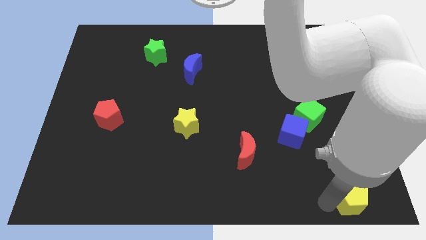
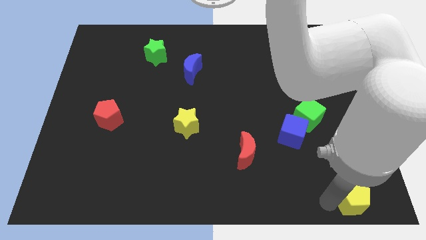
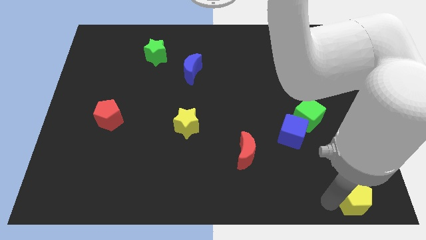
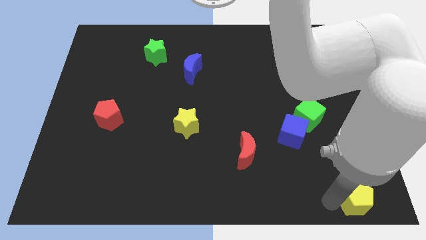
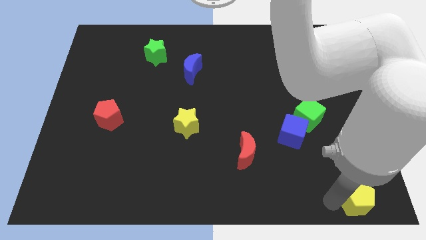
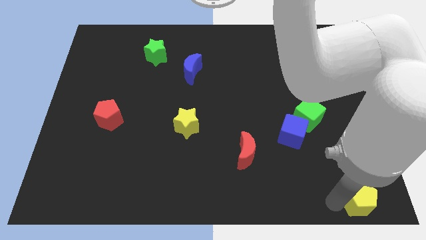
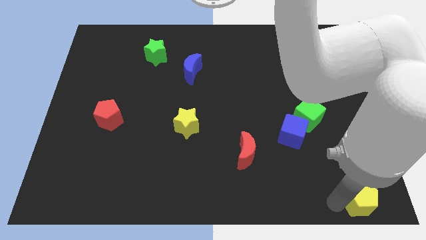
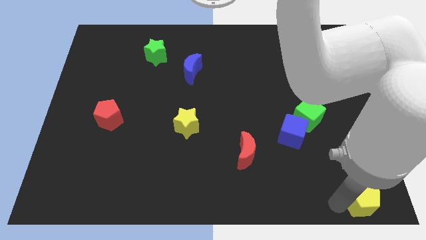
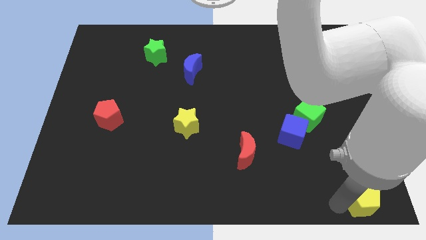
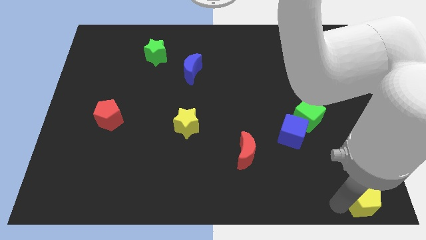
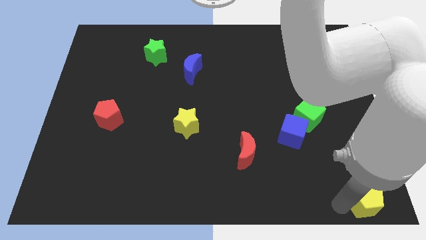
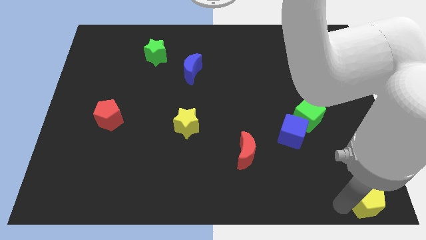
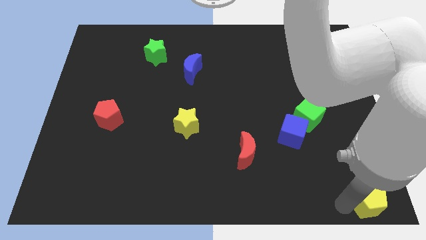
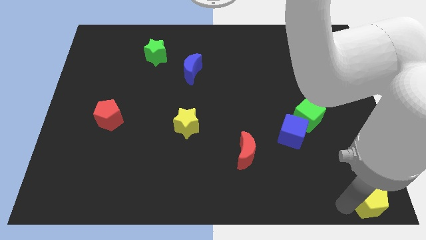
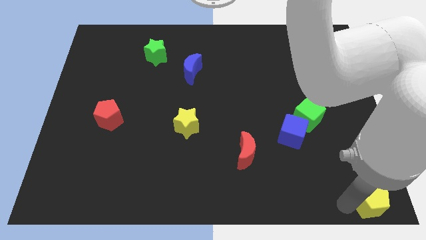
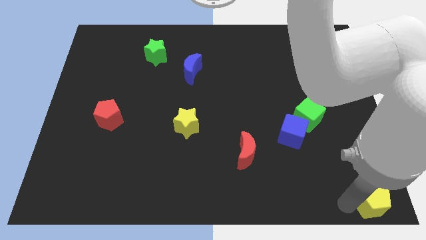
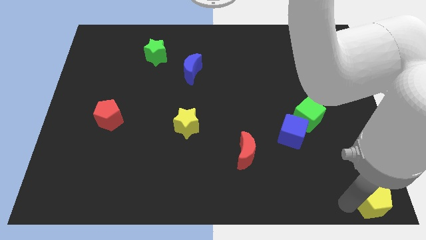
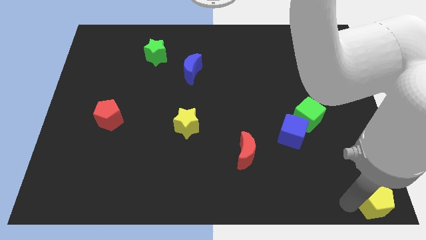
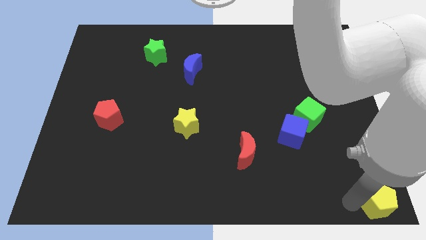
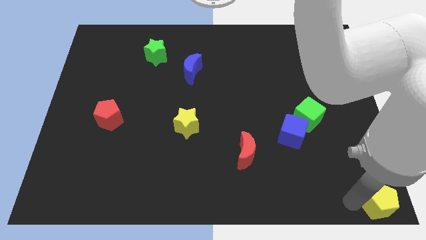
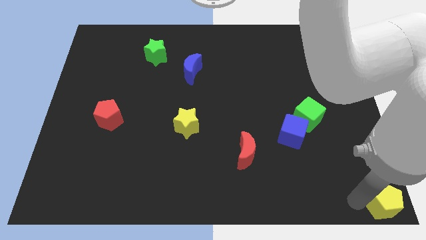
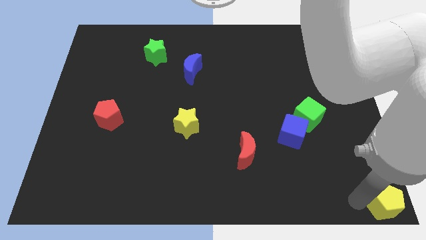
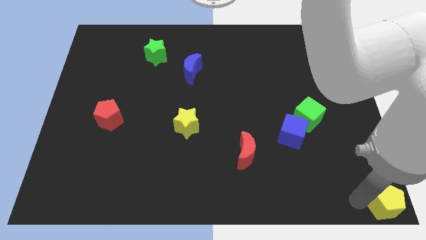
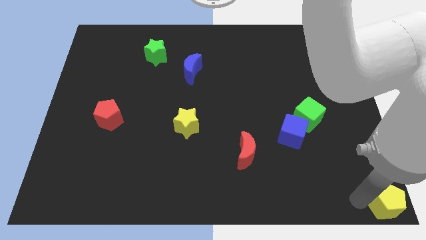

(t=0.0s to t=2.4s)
place the yellow pentagon to the right side of the board

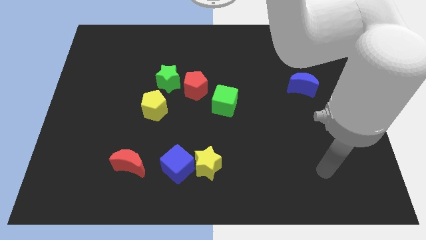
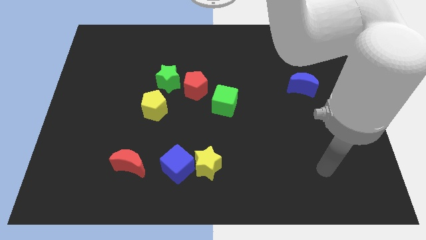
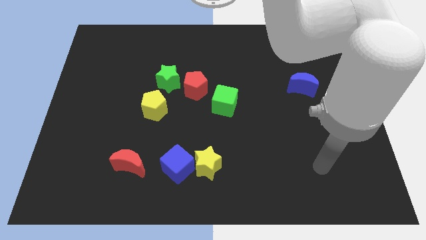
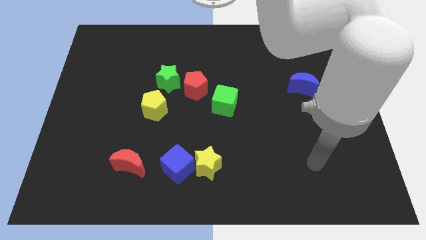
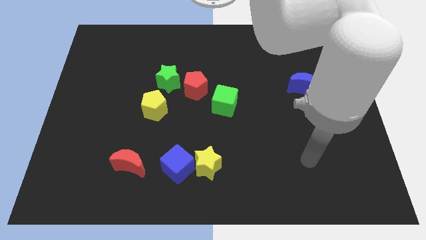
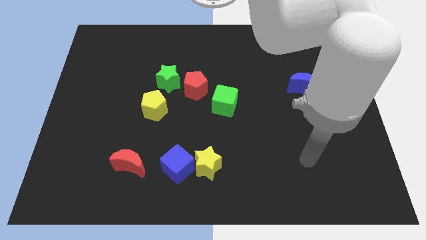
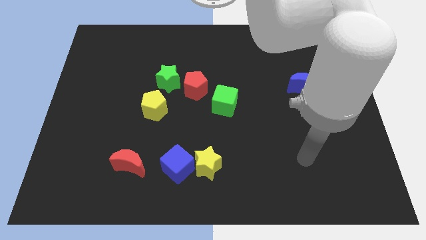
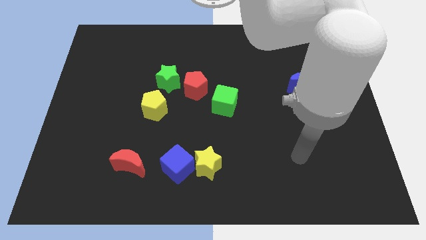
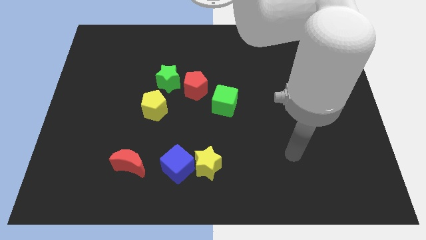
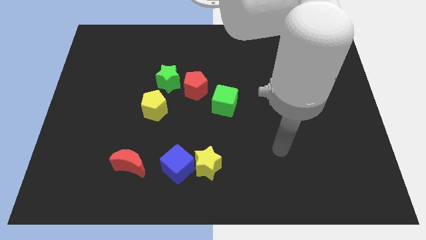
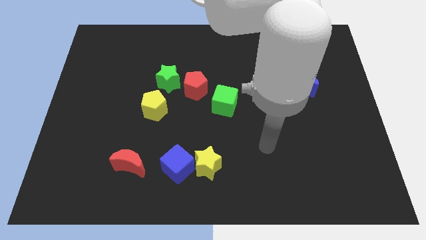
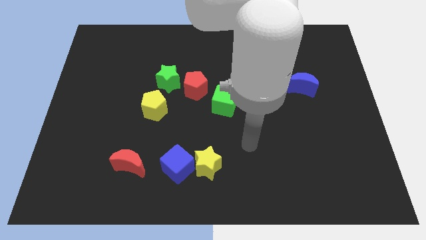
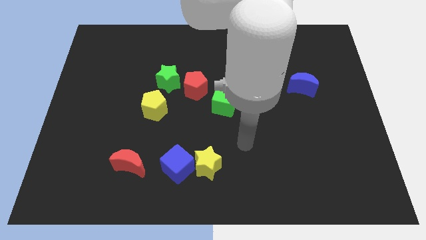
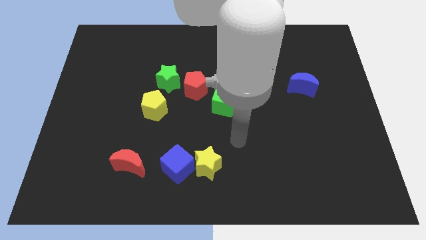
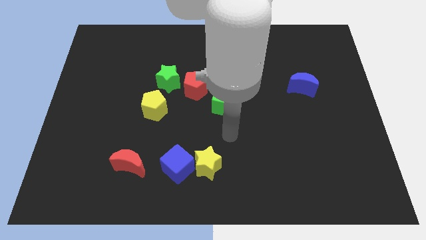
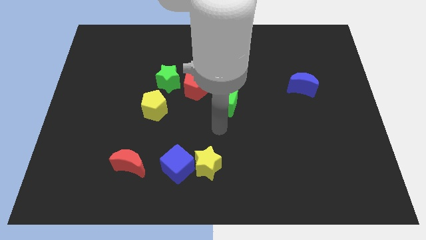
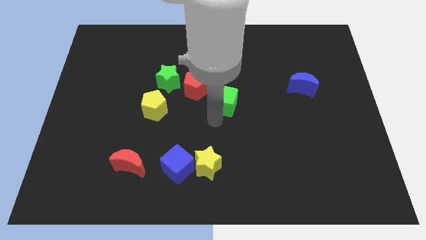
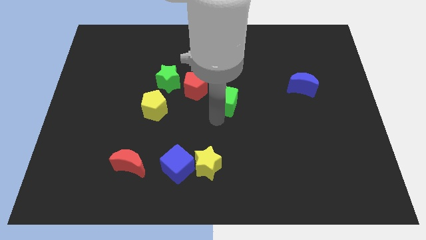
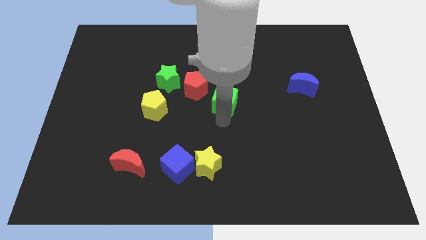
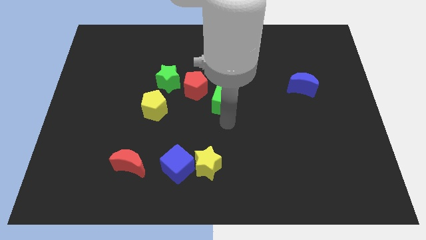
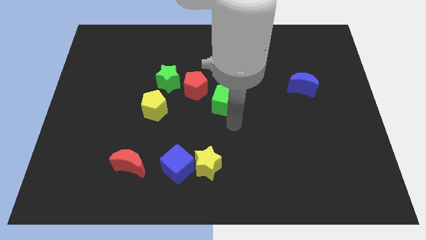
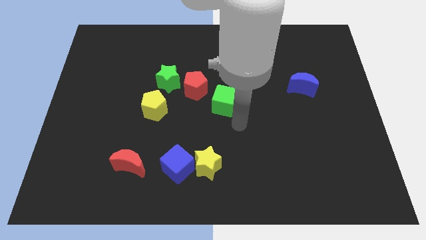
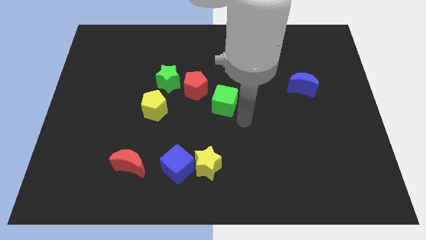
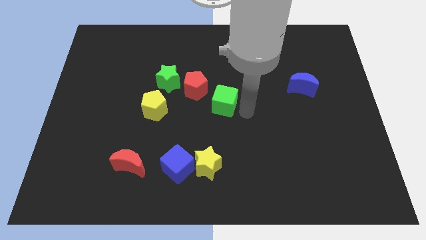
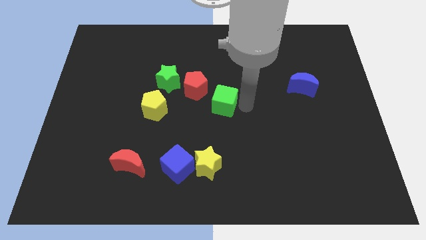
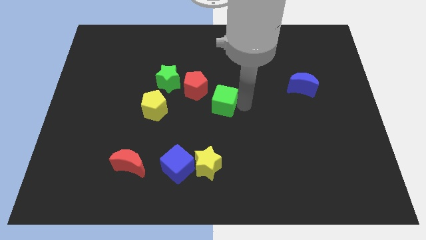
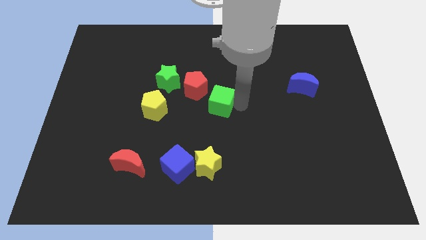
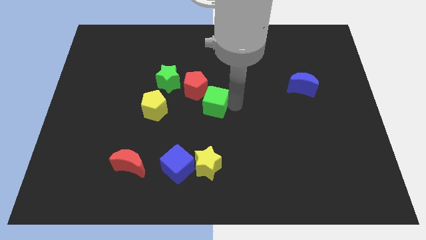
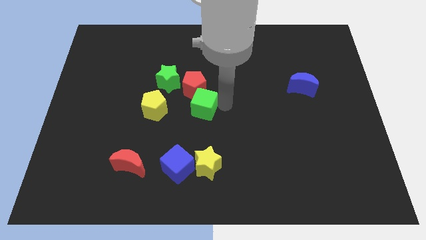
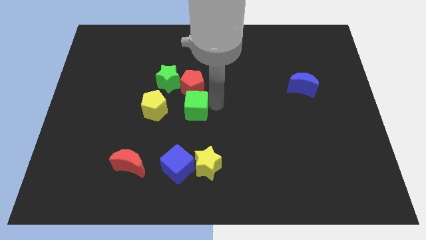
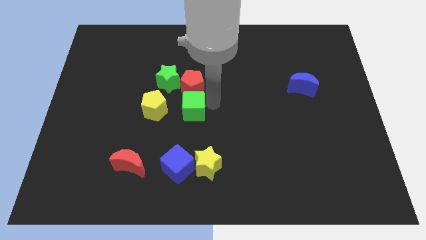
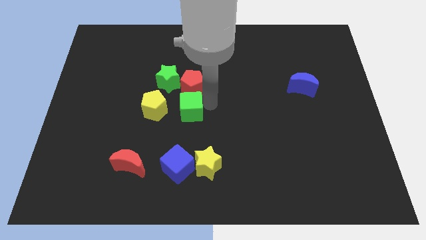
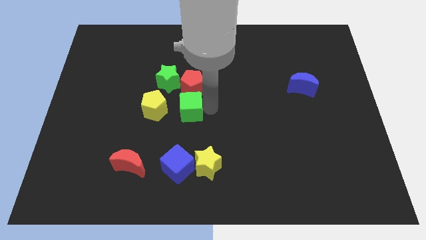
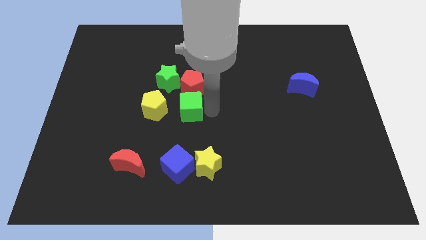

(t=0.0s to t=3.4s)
place the green cube below the red pentagon

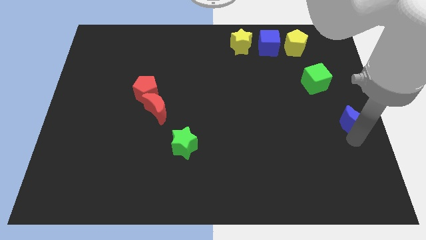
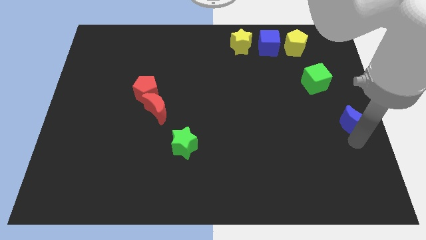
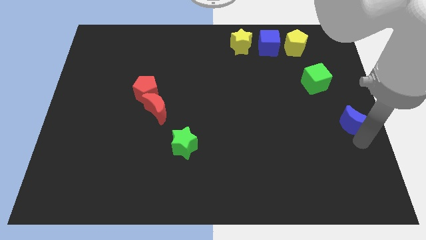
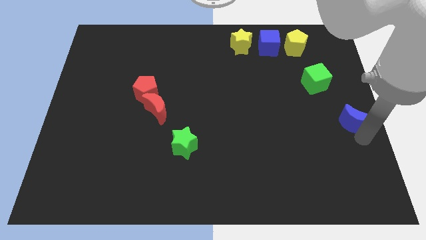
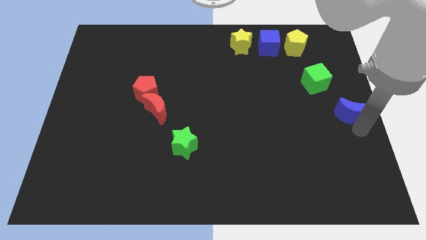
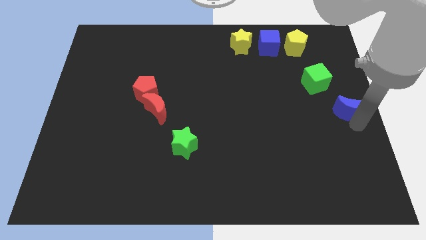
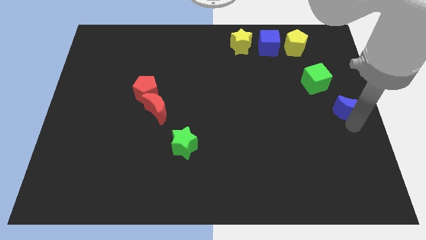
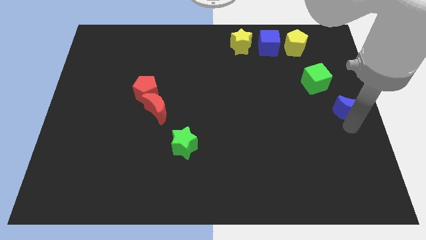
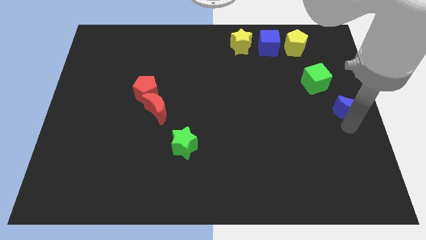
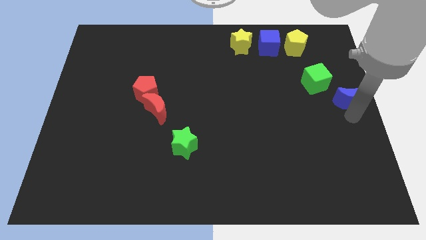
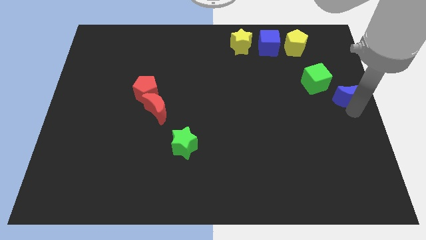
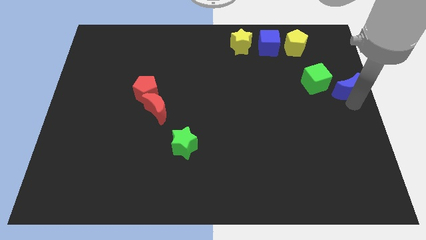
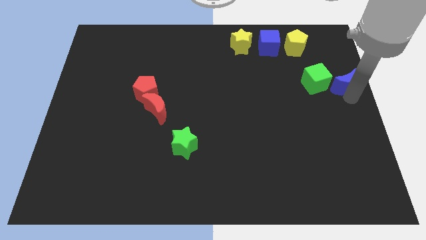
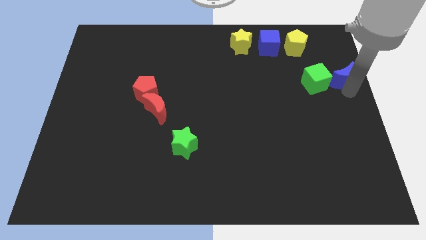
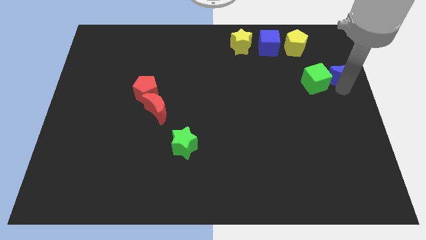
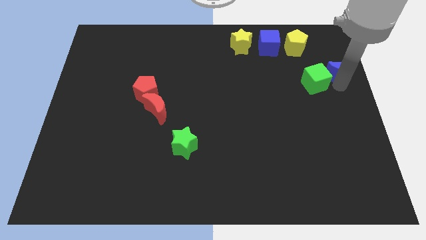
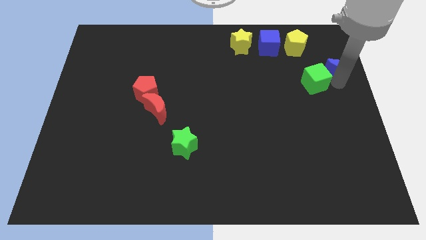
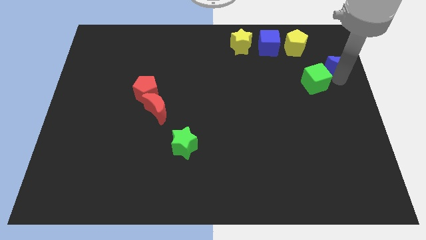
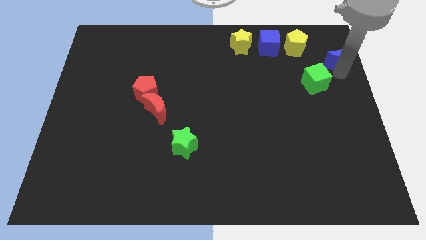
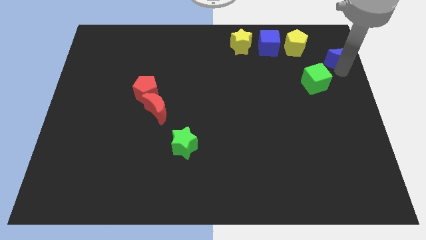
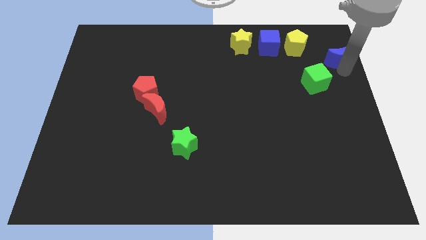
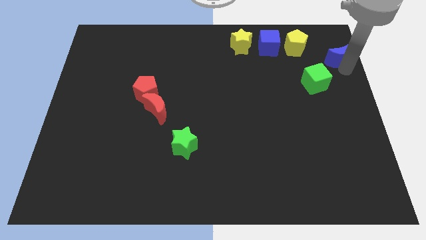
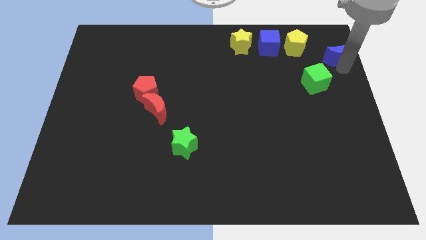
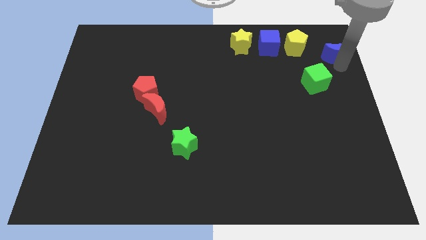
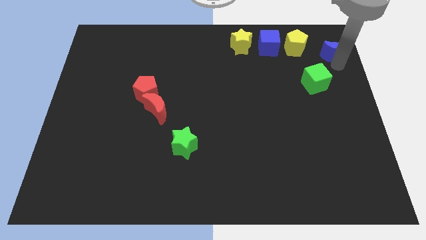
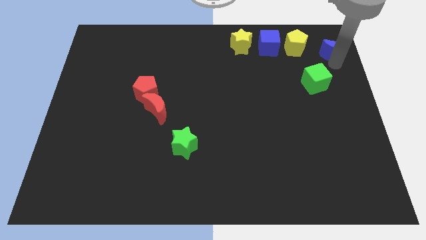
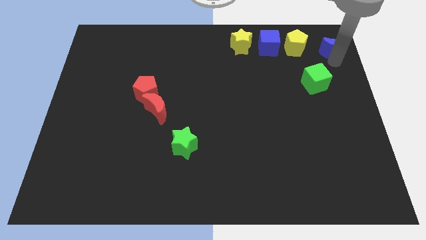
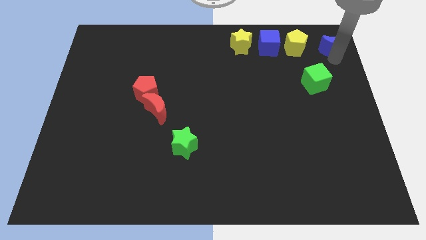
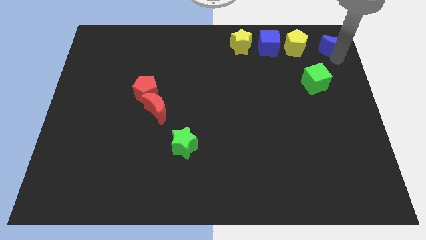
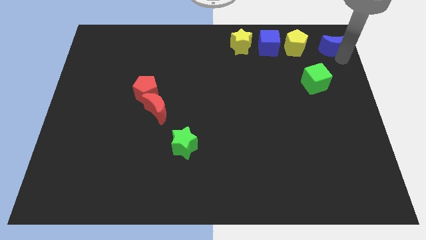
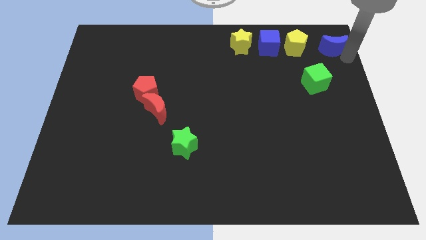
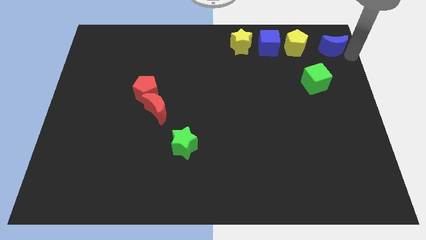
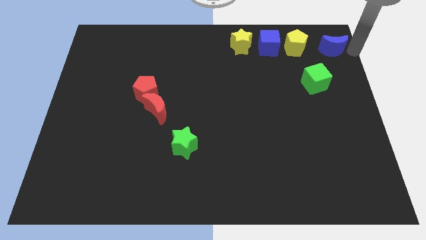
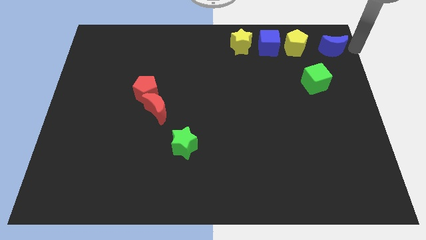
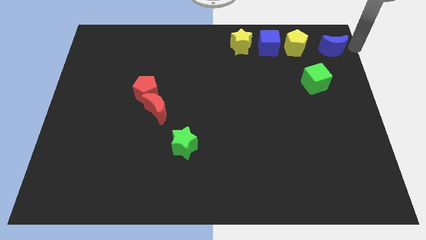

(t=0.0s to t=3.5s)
push the blue moon at the top right corner
